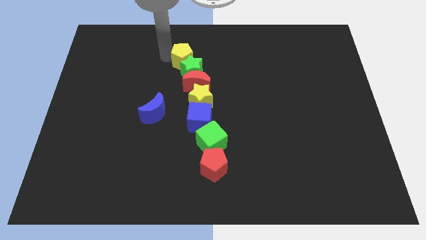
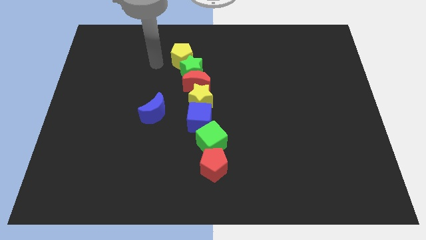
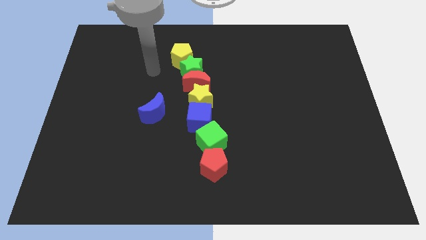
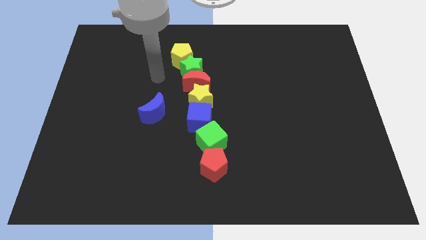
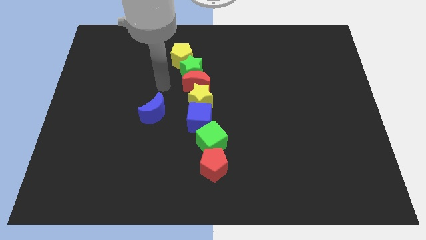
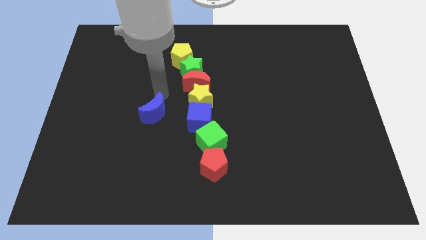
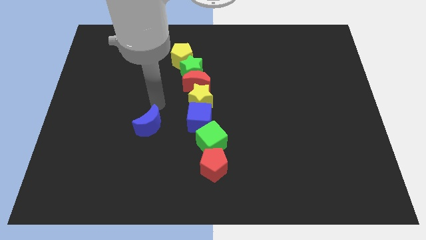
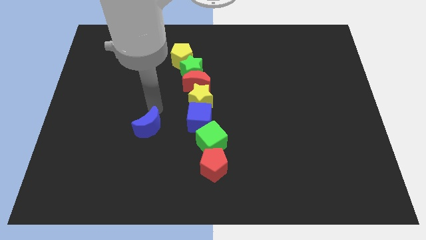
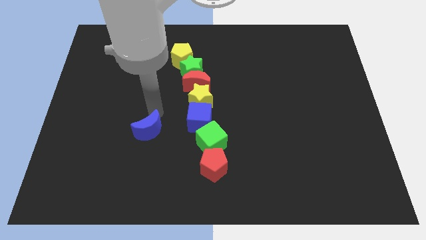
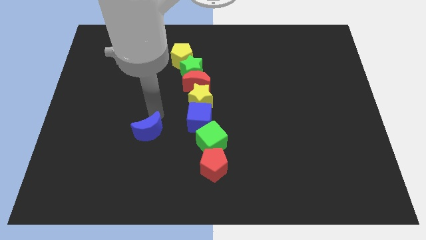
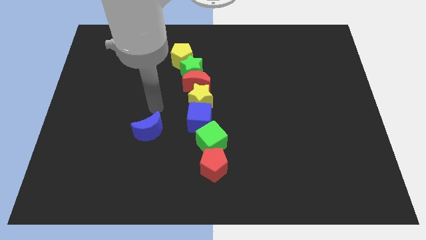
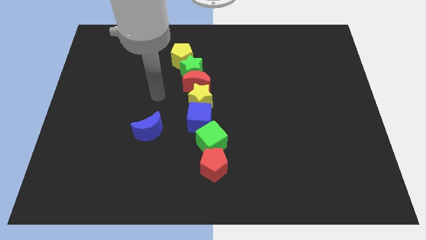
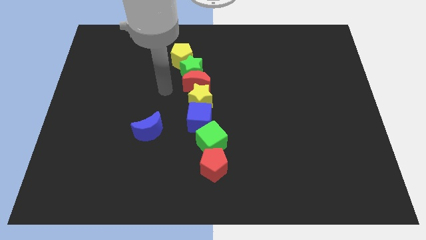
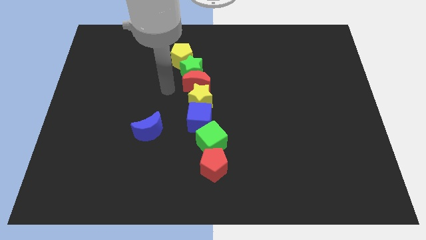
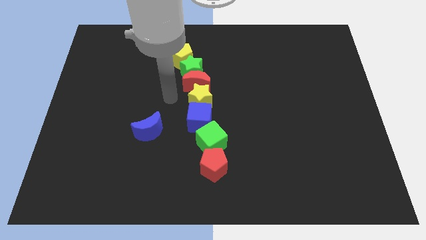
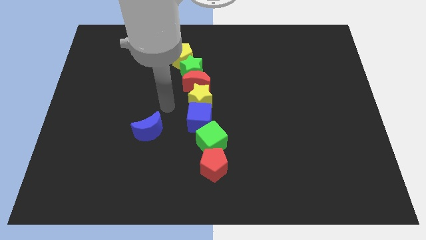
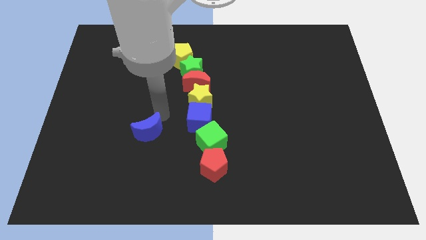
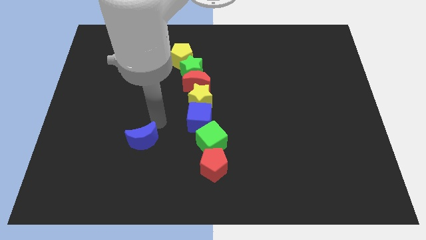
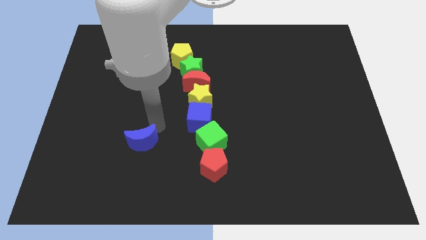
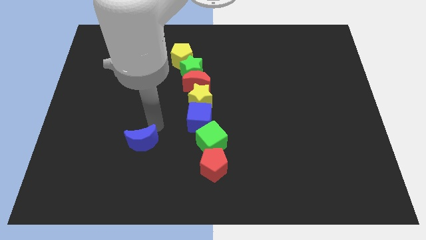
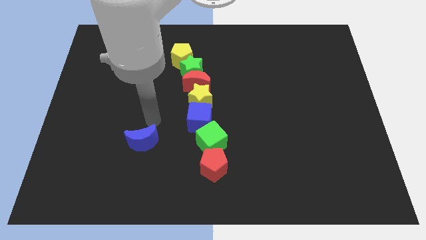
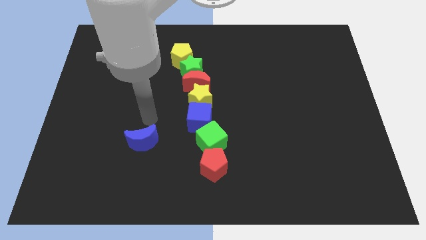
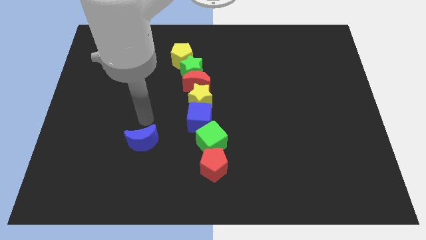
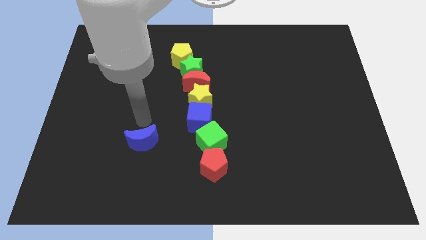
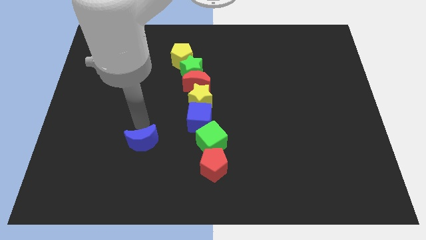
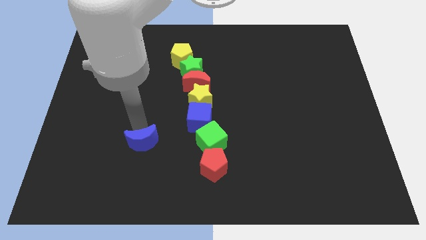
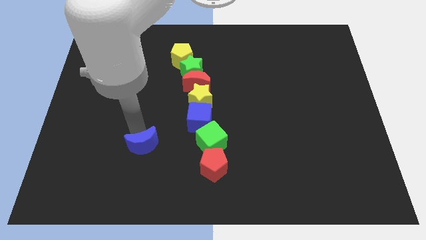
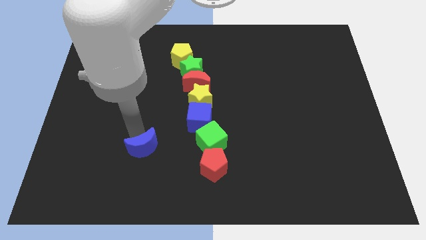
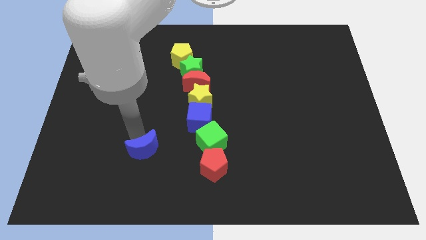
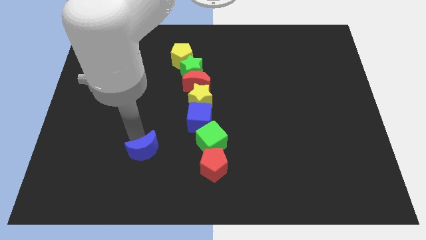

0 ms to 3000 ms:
place the blue crescent to the left of green cube

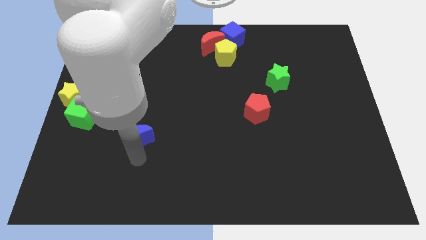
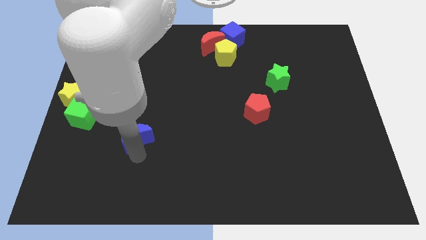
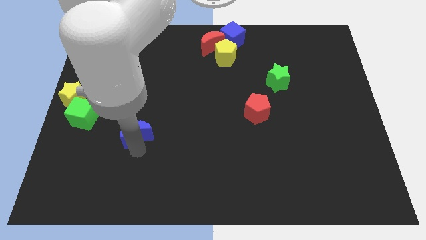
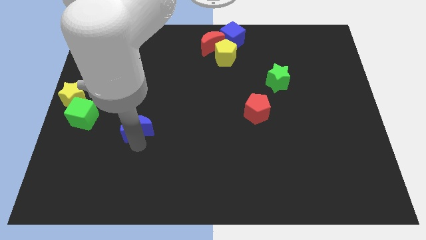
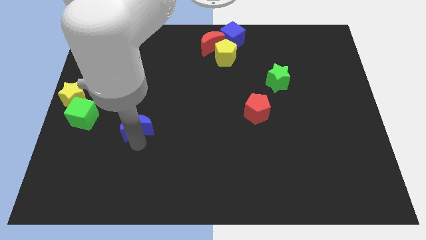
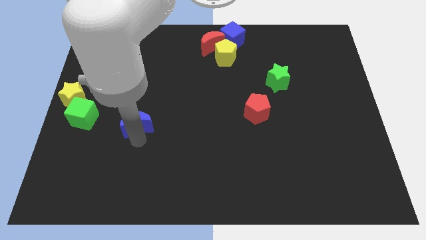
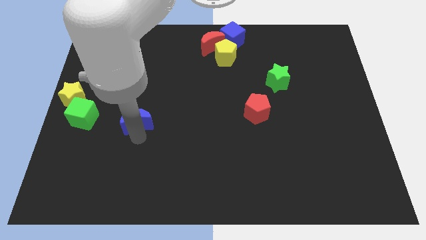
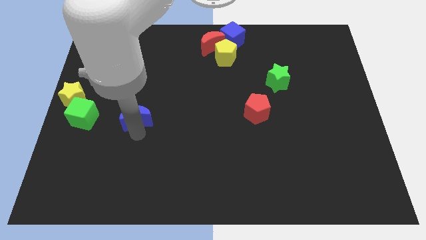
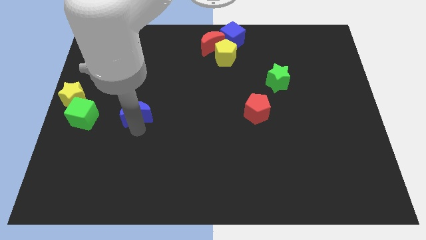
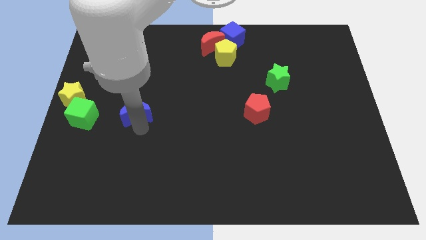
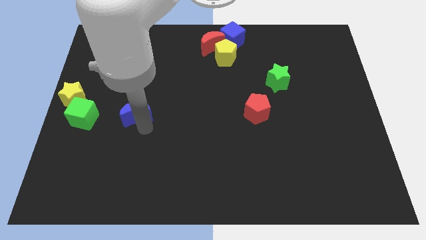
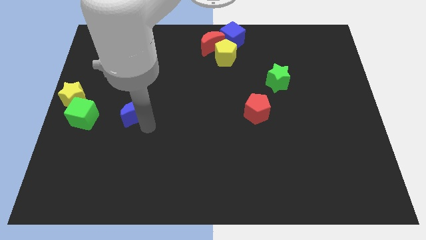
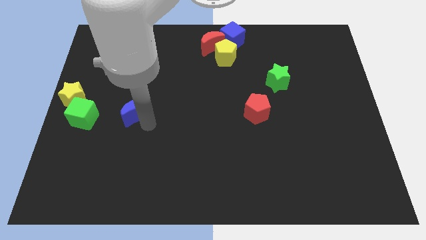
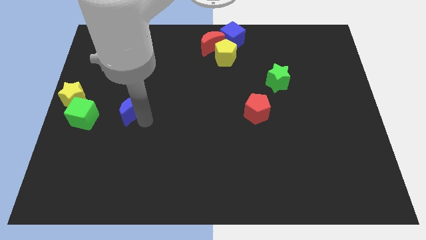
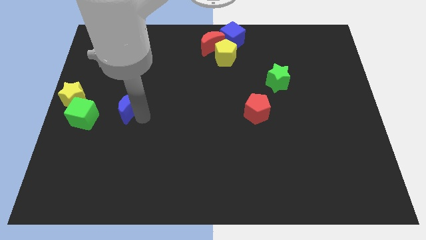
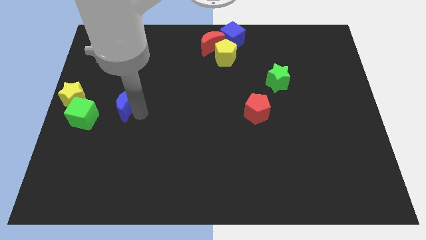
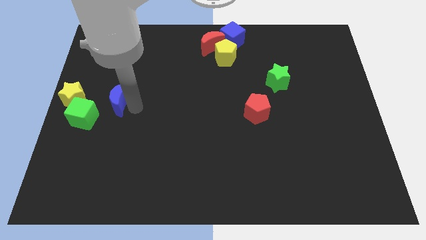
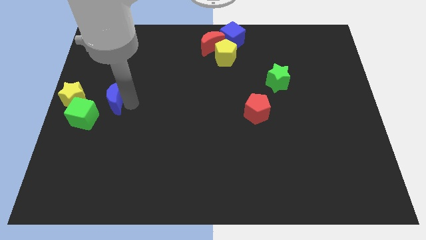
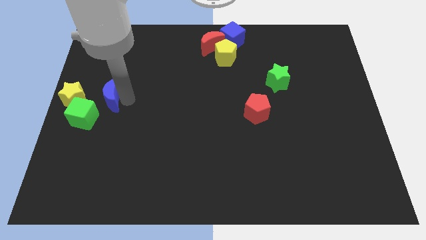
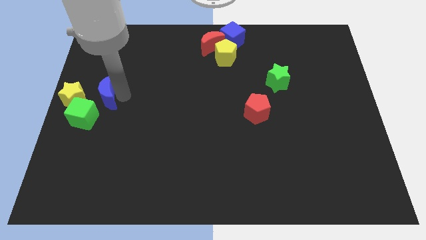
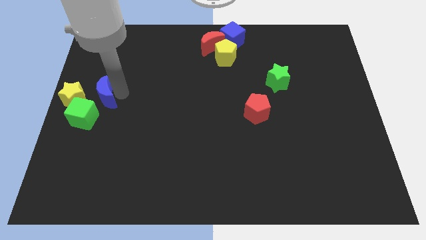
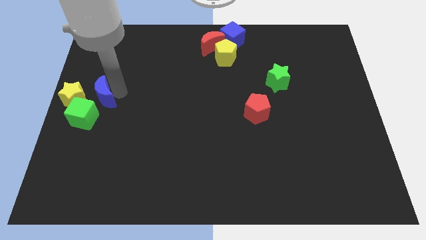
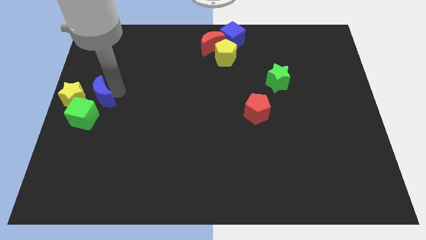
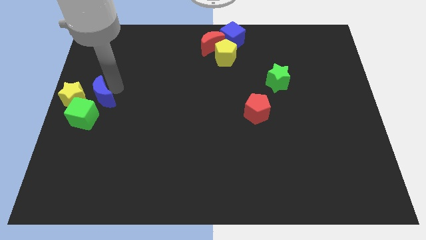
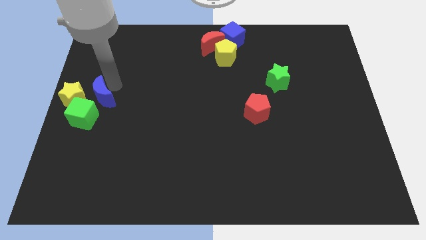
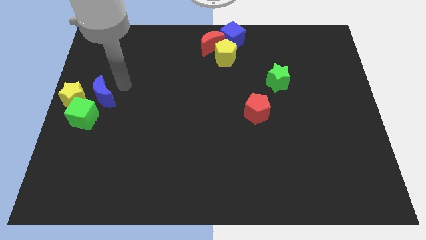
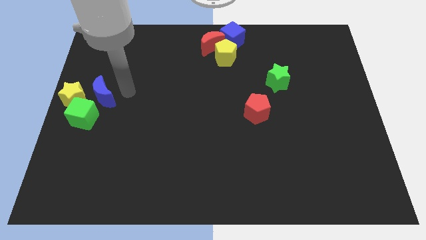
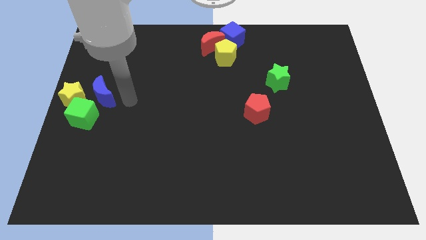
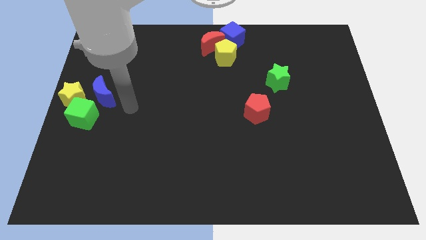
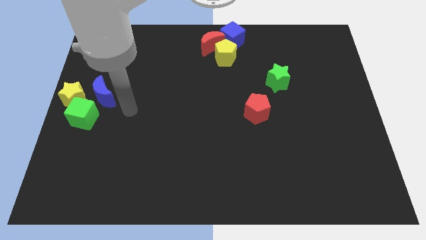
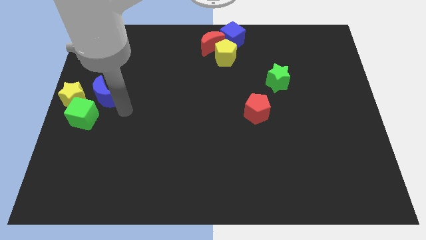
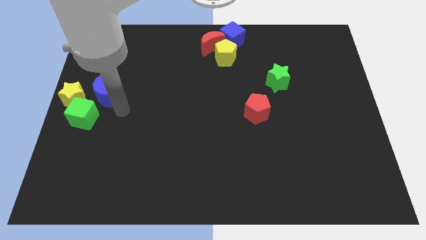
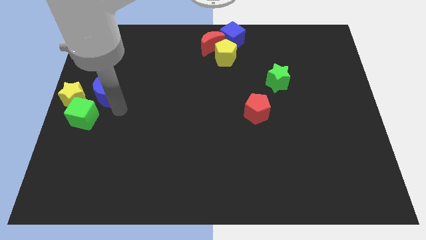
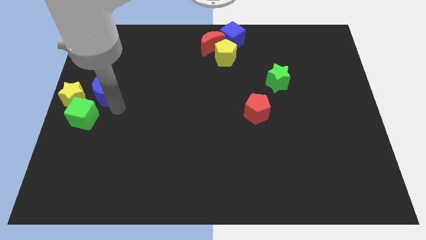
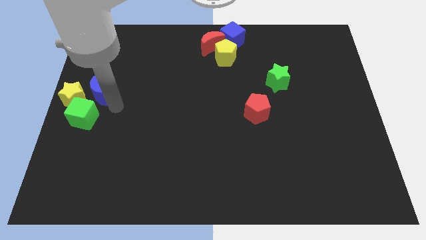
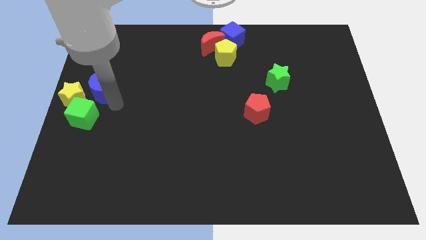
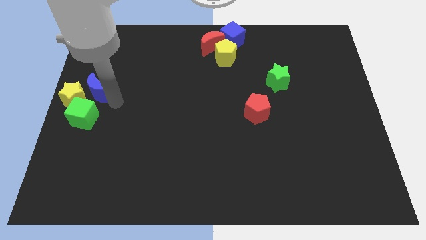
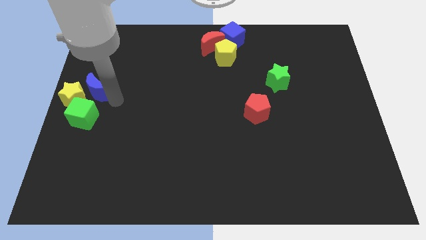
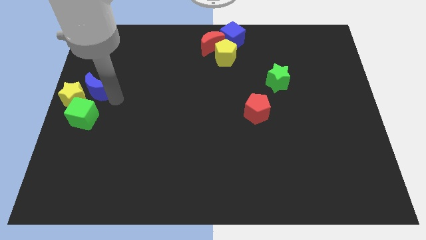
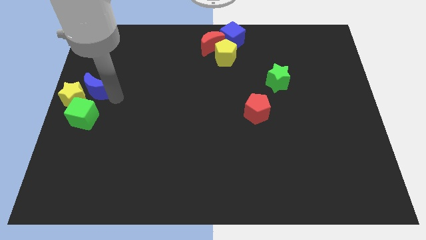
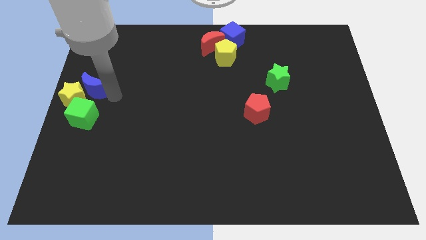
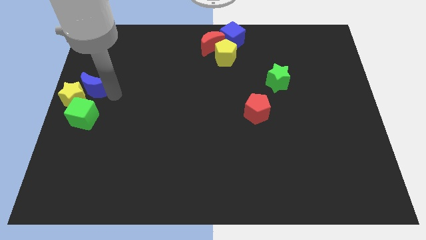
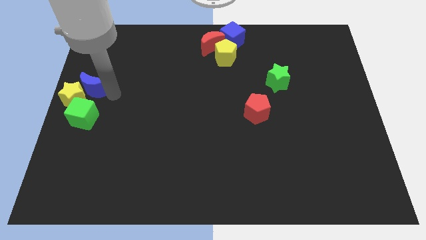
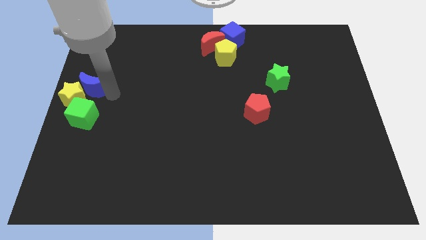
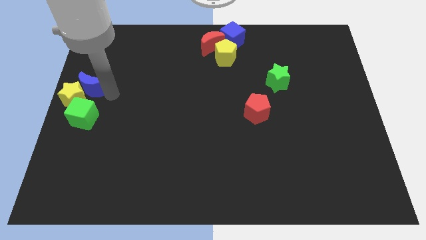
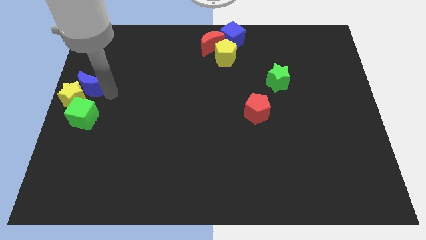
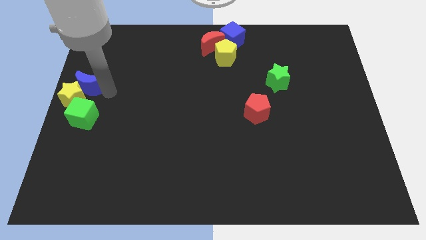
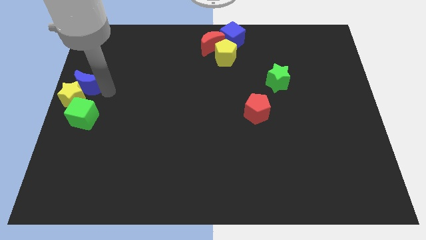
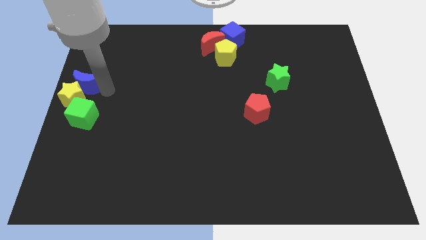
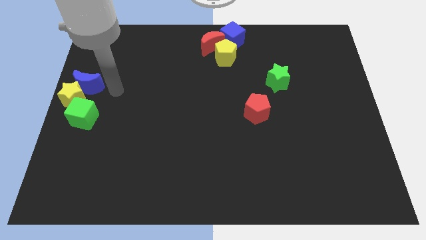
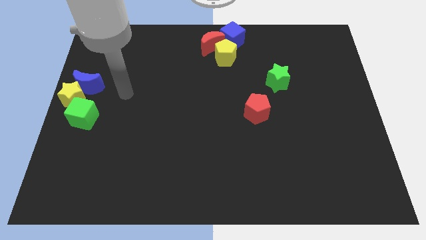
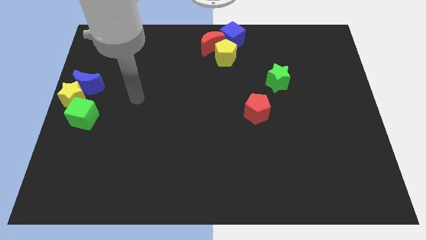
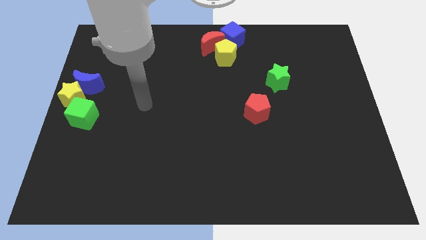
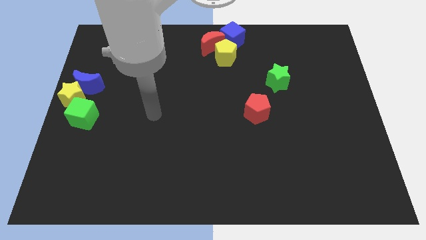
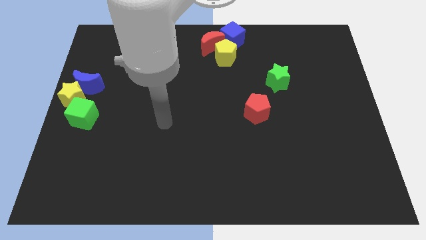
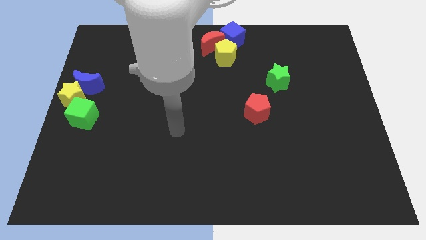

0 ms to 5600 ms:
move the blue moon to the left center of the board

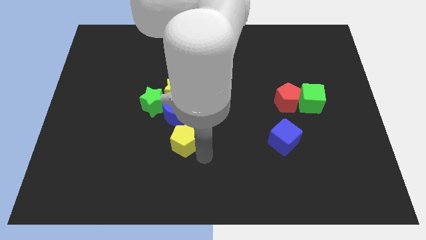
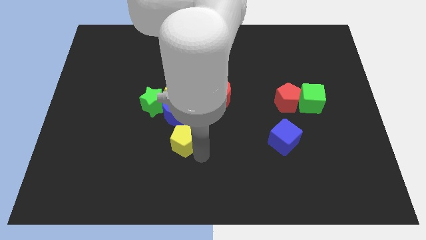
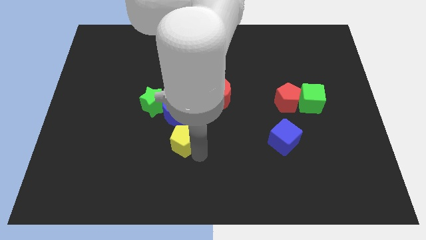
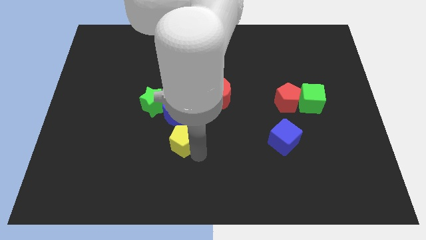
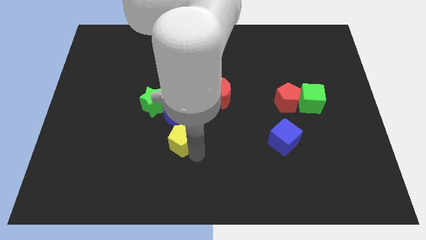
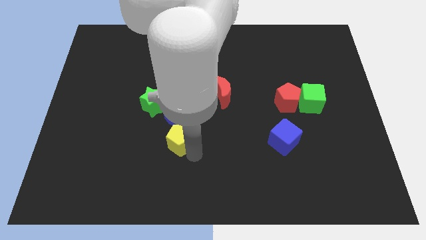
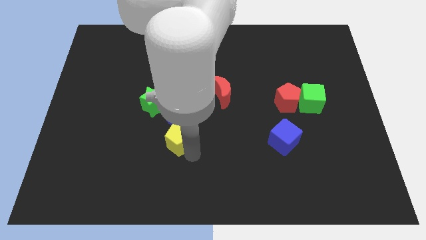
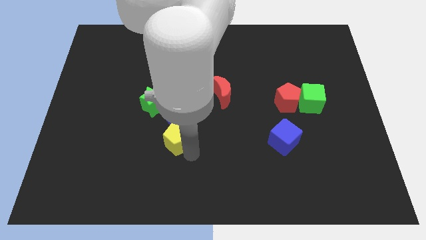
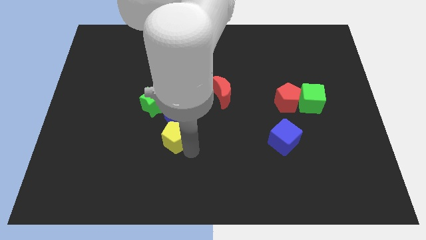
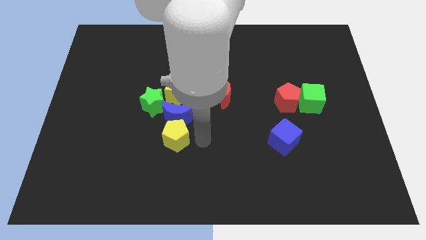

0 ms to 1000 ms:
place the yellow pentagon below blue crescent
